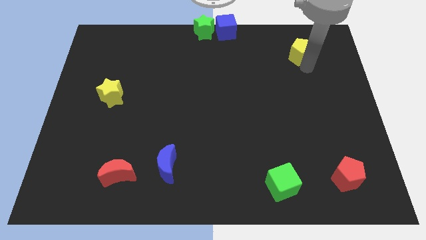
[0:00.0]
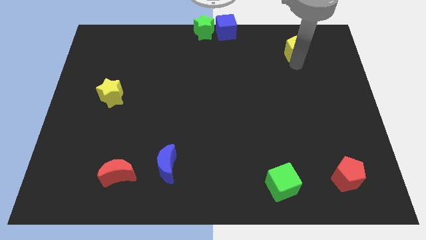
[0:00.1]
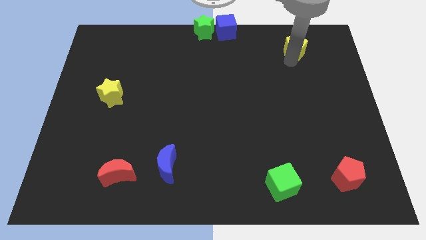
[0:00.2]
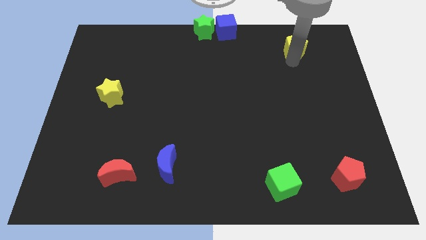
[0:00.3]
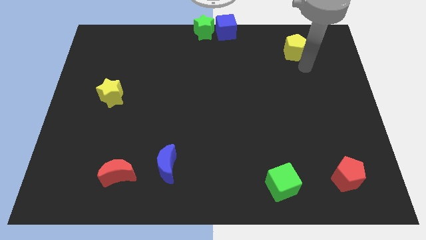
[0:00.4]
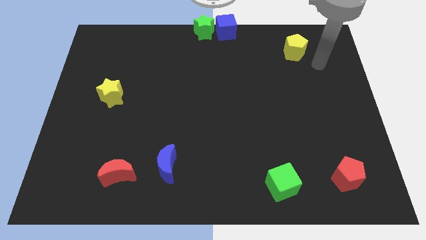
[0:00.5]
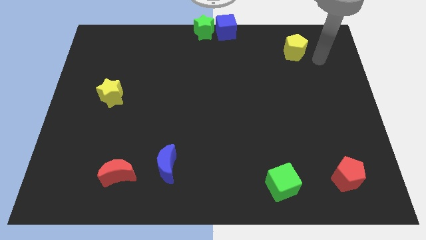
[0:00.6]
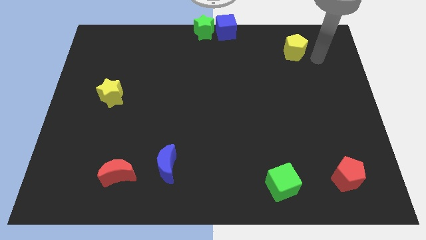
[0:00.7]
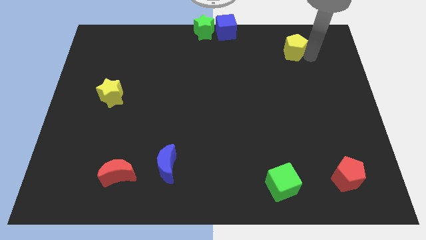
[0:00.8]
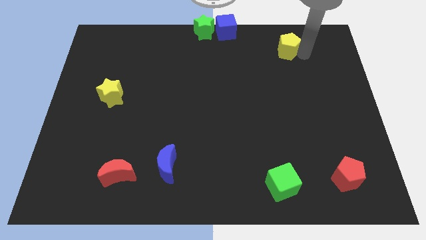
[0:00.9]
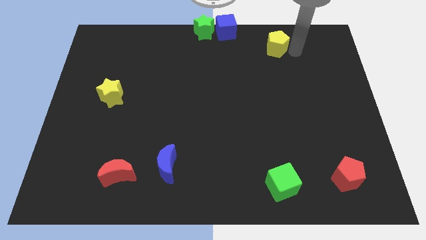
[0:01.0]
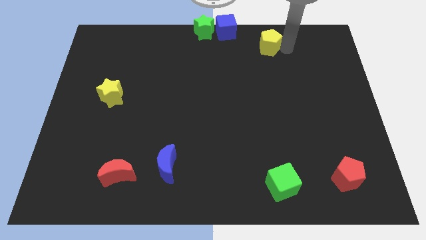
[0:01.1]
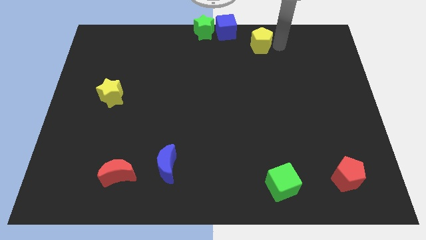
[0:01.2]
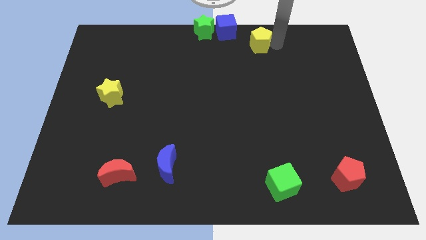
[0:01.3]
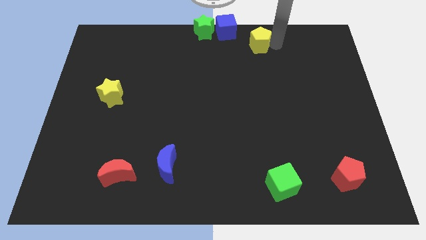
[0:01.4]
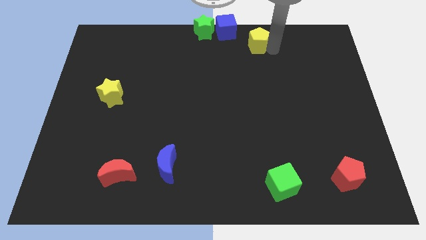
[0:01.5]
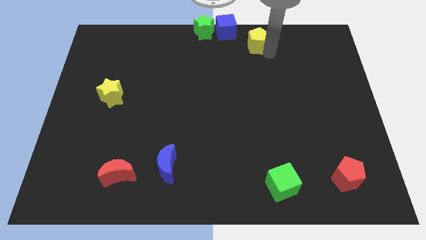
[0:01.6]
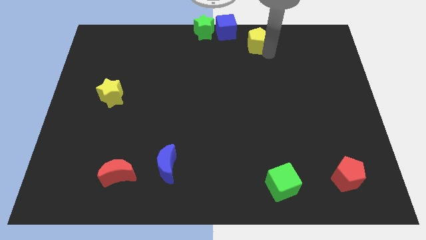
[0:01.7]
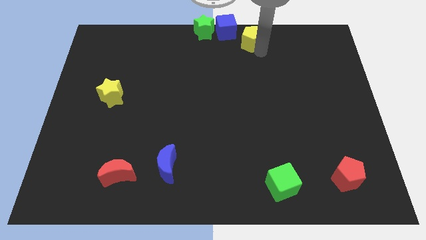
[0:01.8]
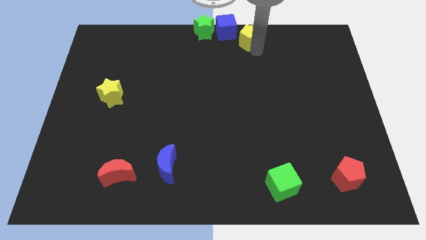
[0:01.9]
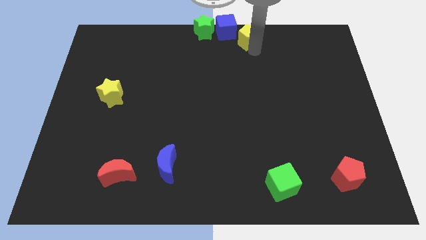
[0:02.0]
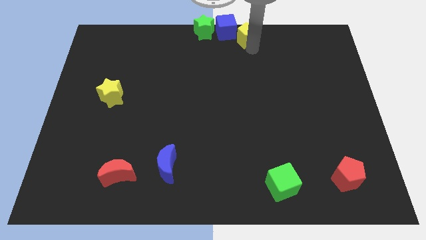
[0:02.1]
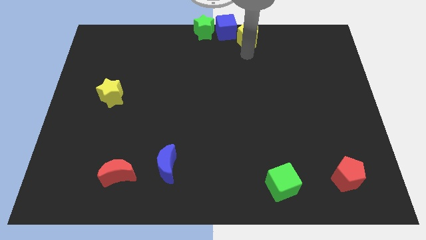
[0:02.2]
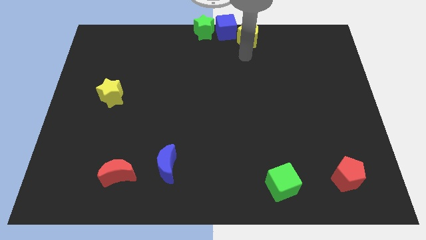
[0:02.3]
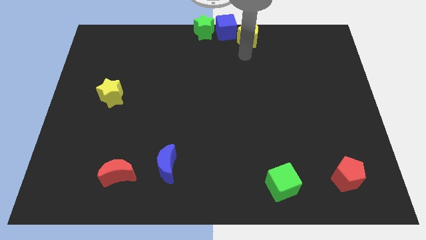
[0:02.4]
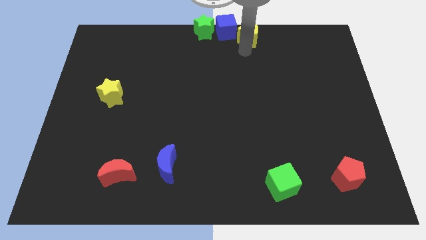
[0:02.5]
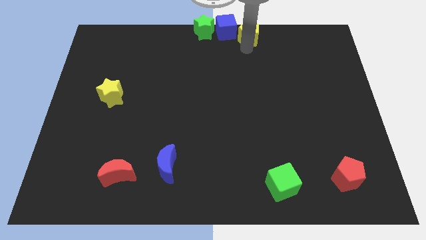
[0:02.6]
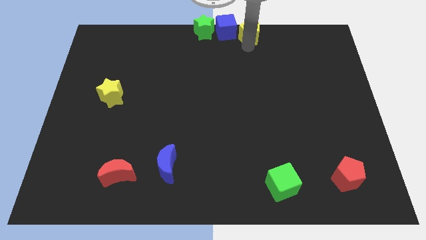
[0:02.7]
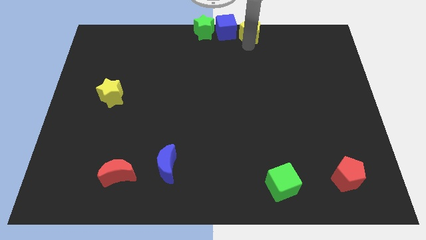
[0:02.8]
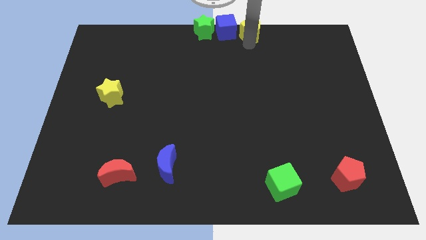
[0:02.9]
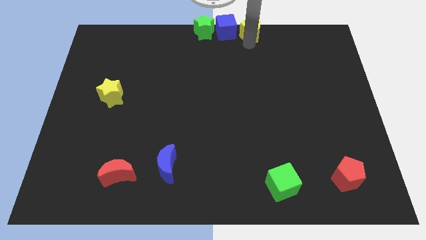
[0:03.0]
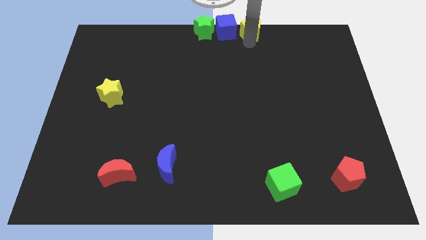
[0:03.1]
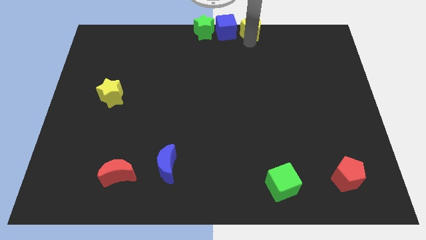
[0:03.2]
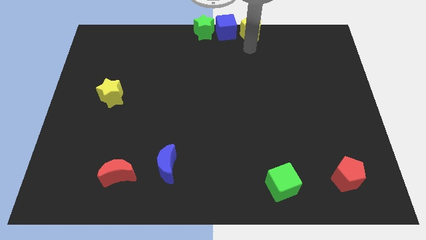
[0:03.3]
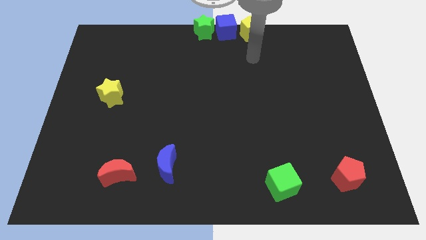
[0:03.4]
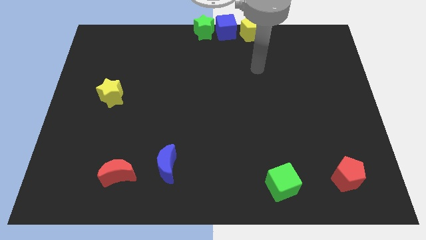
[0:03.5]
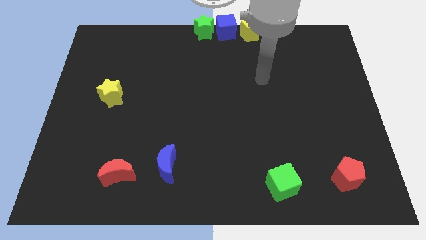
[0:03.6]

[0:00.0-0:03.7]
move yellow pentagon on right side of blue cube

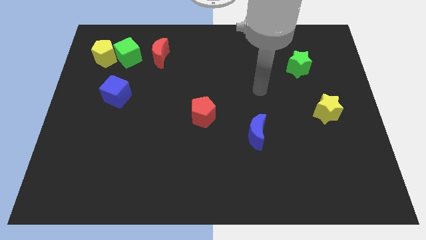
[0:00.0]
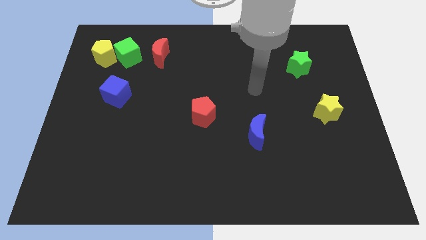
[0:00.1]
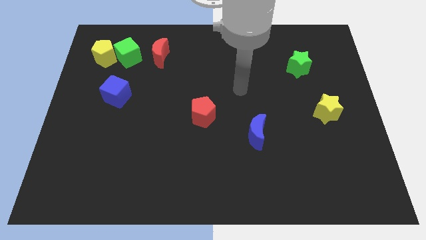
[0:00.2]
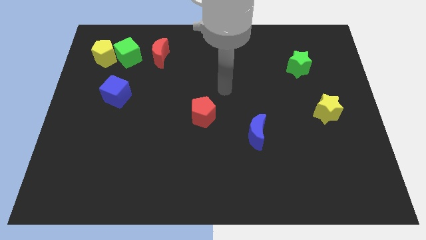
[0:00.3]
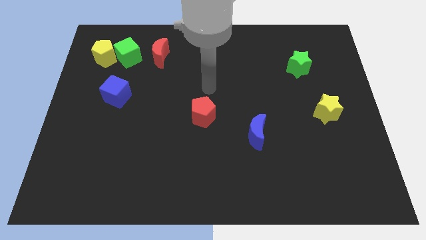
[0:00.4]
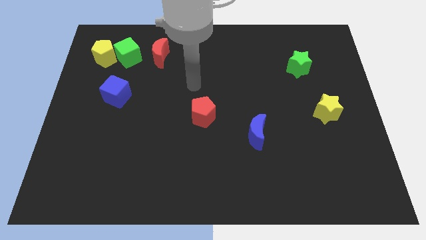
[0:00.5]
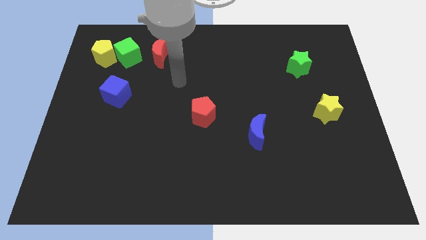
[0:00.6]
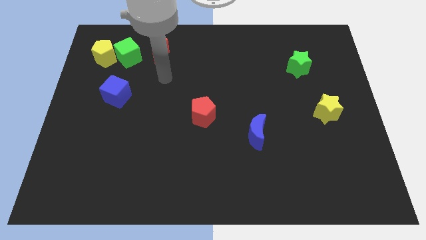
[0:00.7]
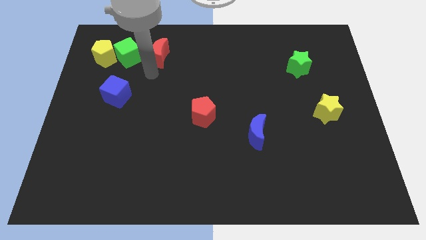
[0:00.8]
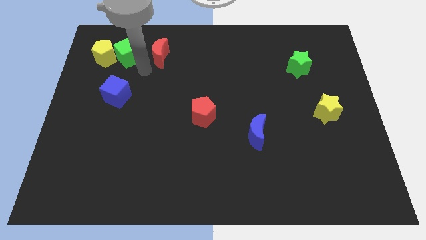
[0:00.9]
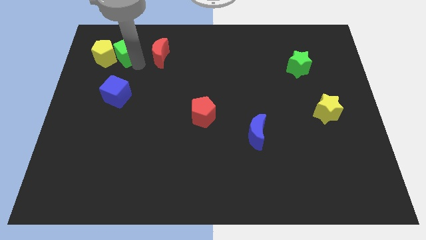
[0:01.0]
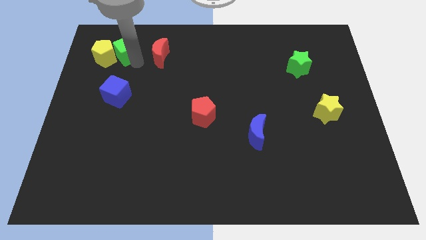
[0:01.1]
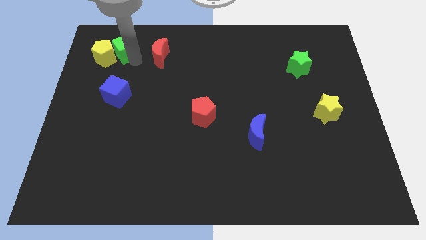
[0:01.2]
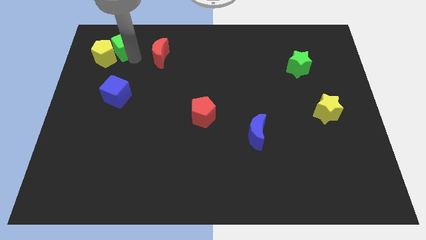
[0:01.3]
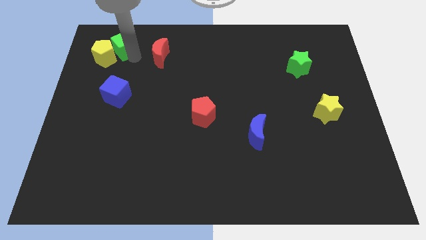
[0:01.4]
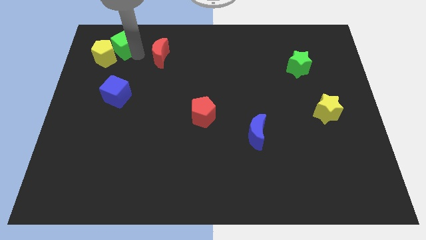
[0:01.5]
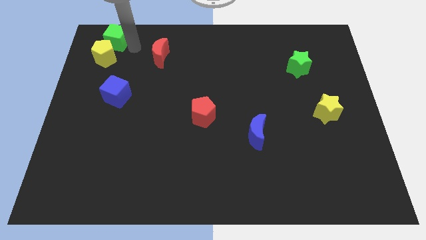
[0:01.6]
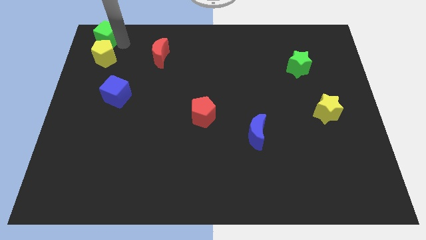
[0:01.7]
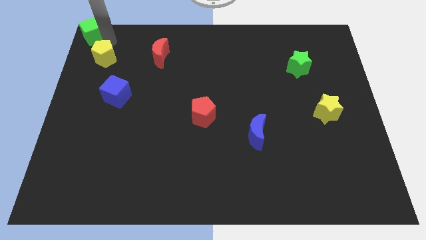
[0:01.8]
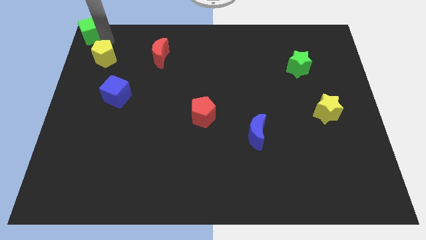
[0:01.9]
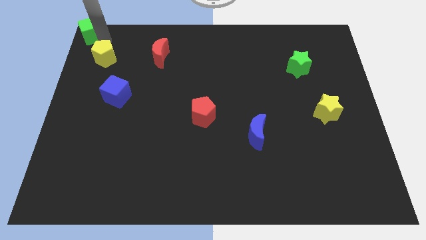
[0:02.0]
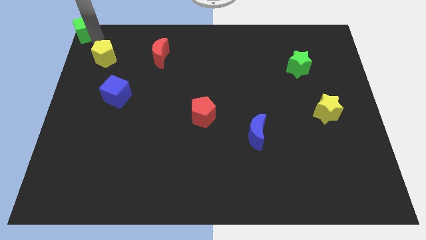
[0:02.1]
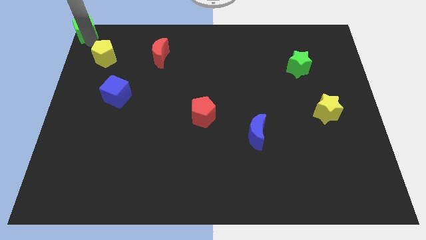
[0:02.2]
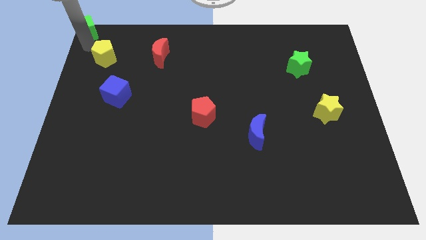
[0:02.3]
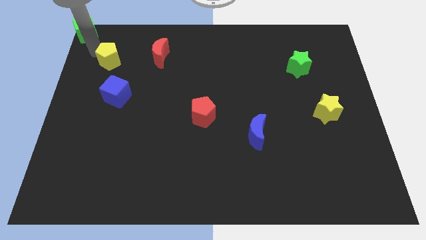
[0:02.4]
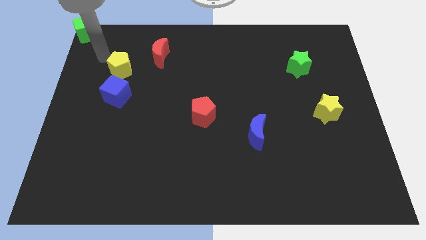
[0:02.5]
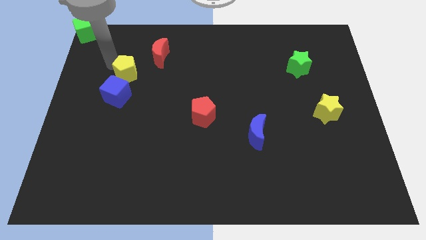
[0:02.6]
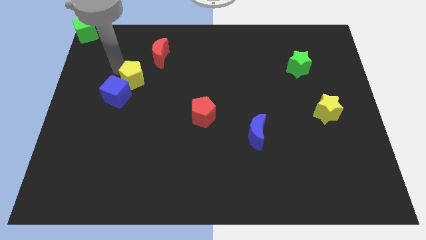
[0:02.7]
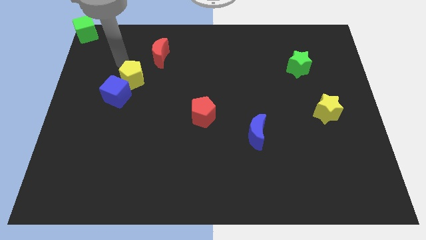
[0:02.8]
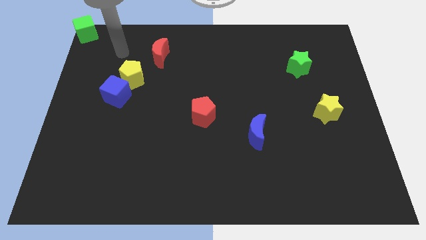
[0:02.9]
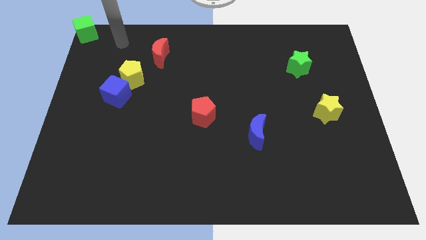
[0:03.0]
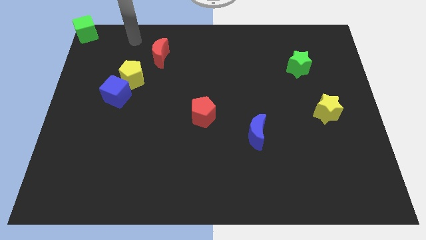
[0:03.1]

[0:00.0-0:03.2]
move the green cube and yellow pentagon diagonal to each other

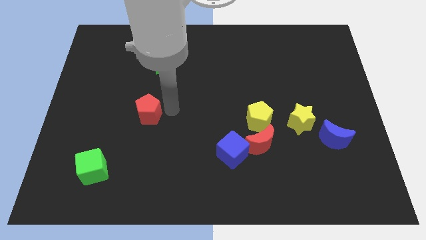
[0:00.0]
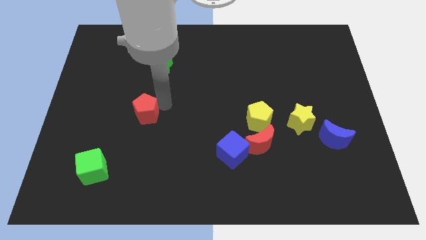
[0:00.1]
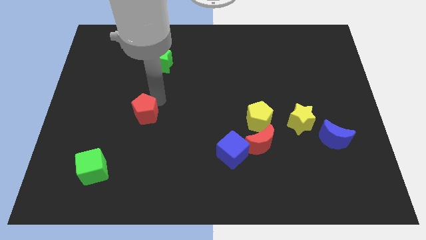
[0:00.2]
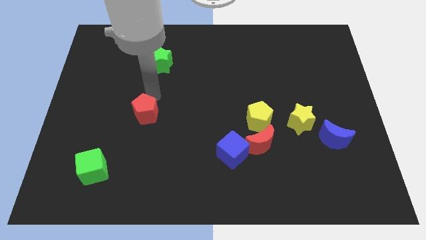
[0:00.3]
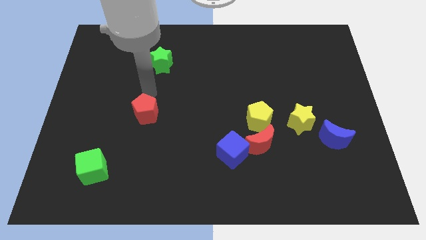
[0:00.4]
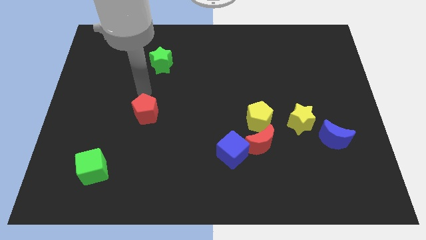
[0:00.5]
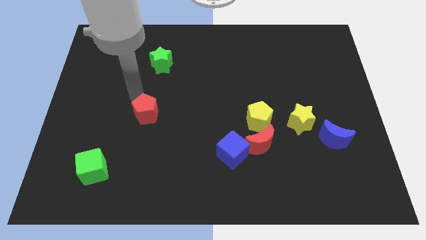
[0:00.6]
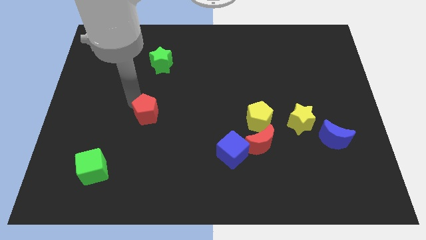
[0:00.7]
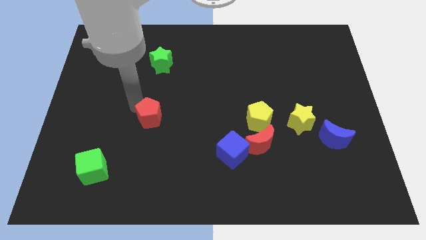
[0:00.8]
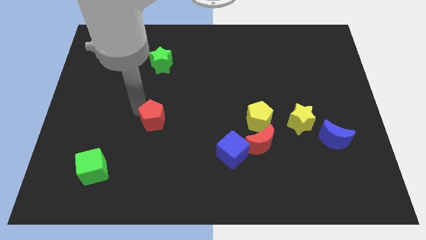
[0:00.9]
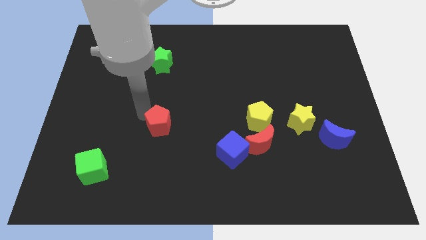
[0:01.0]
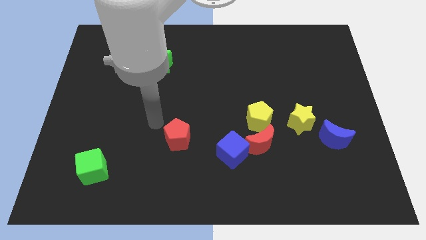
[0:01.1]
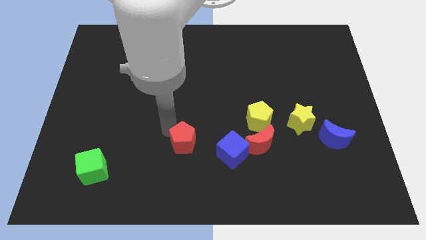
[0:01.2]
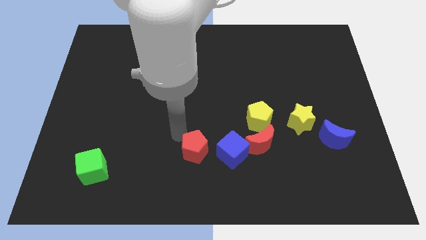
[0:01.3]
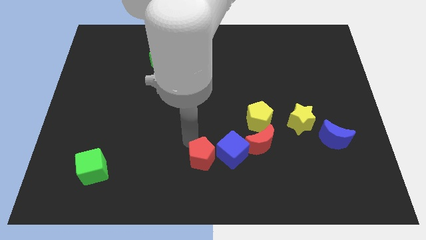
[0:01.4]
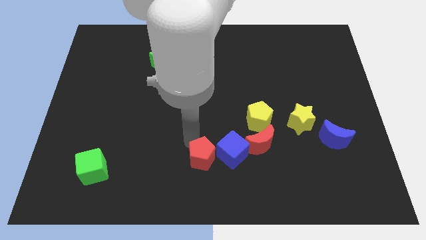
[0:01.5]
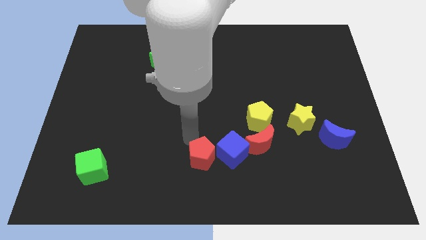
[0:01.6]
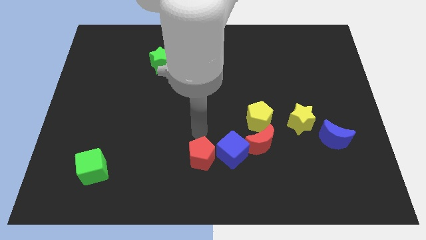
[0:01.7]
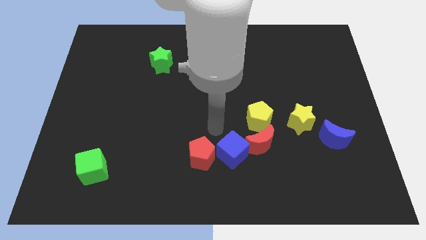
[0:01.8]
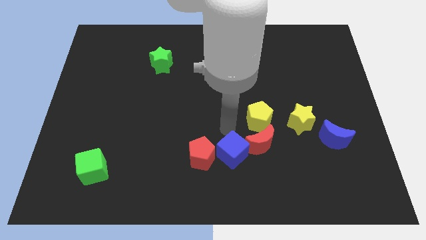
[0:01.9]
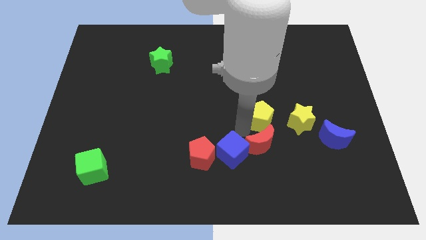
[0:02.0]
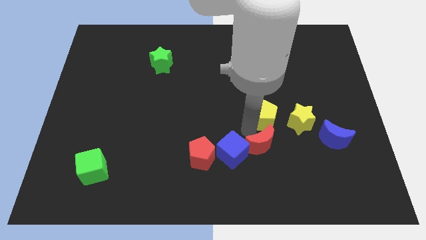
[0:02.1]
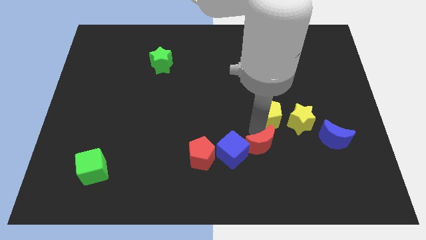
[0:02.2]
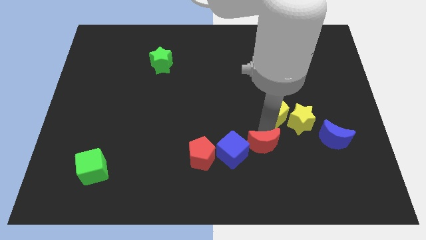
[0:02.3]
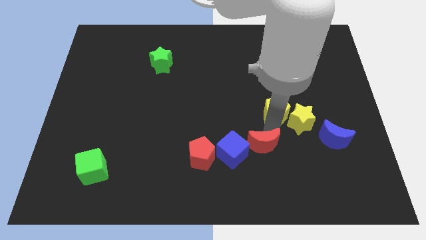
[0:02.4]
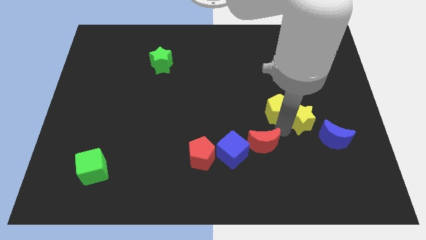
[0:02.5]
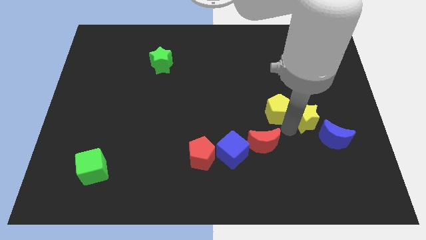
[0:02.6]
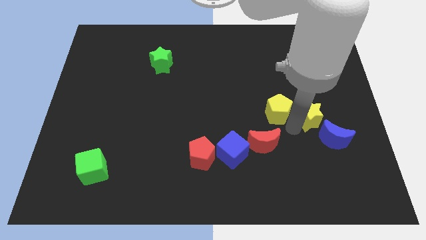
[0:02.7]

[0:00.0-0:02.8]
move the red pentagon into the left side of the blue cube
